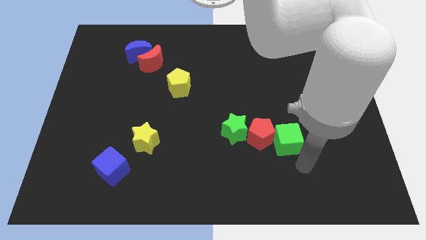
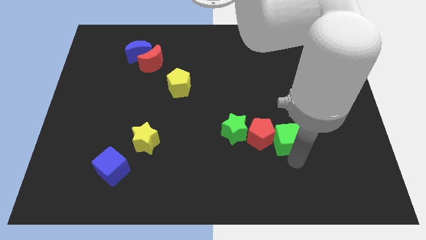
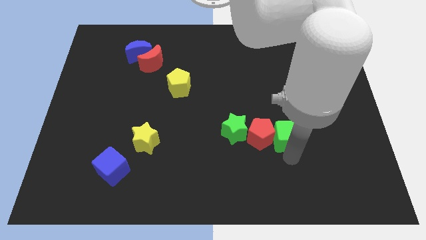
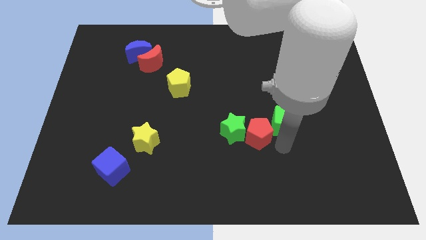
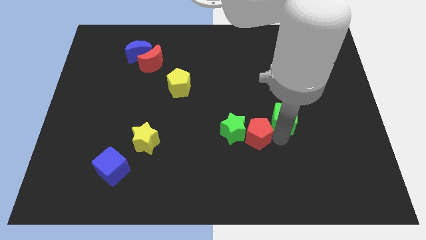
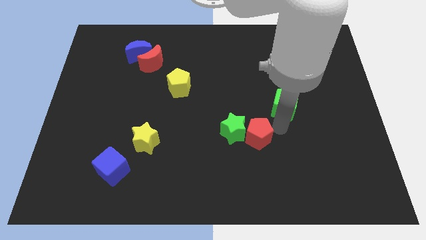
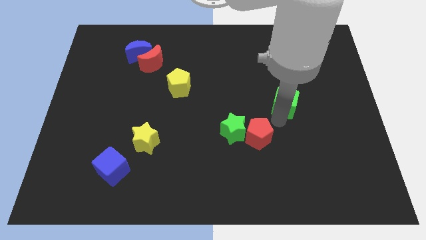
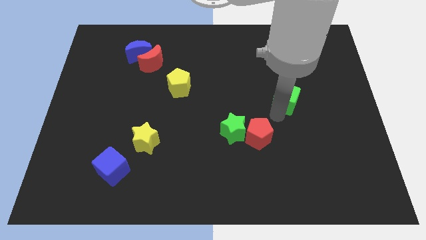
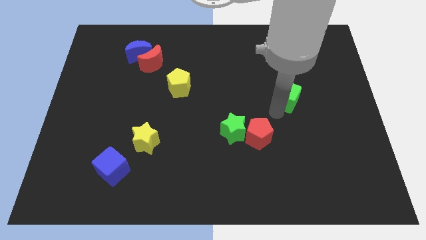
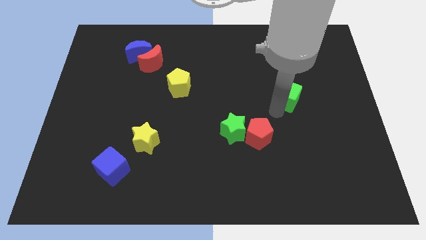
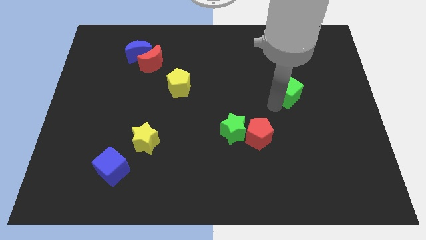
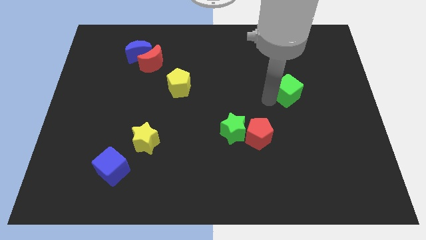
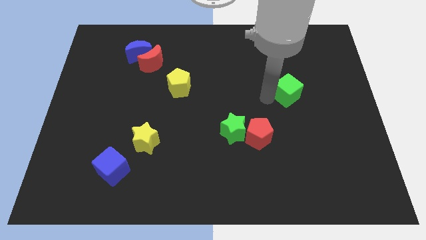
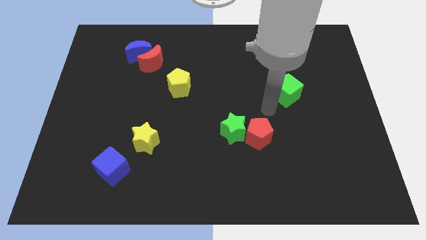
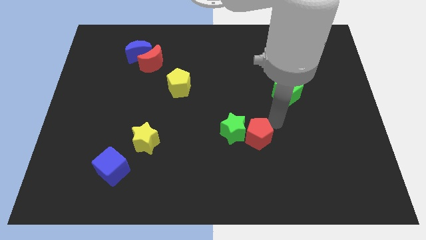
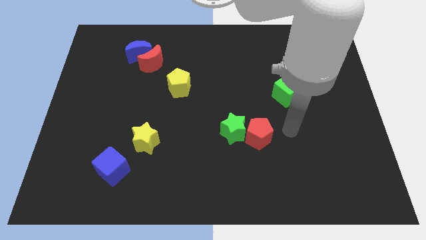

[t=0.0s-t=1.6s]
separate the green cube from the right side of the red pentagon

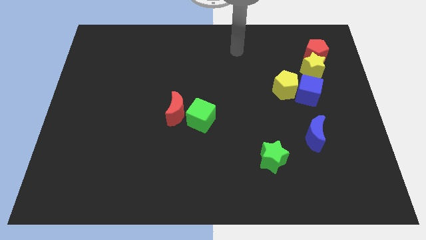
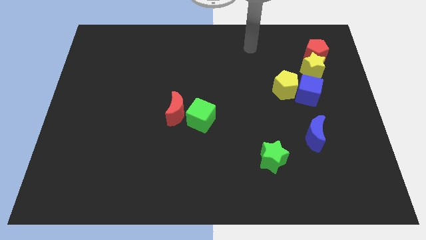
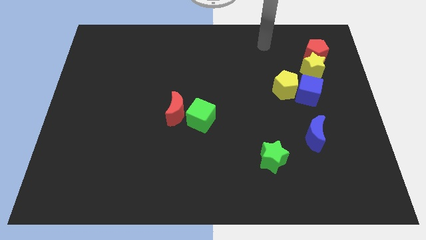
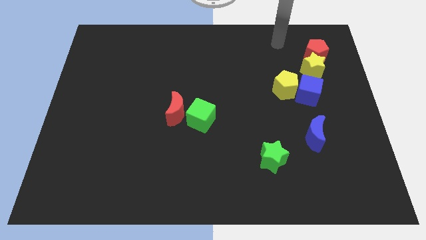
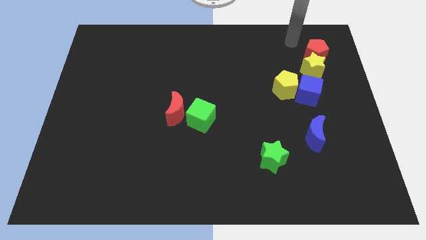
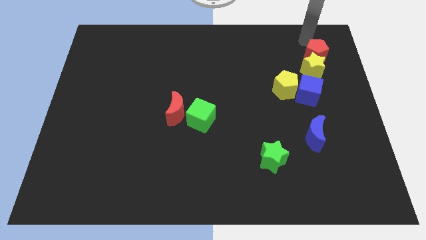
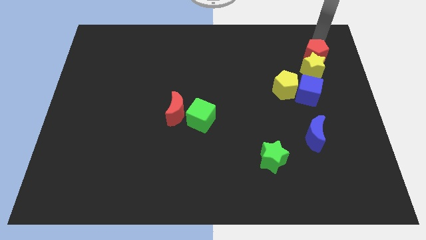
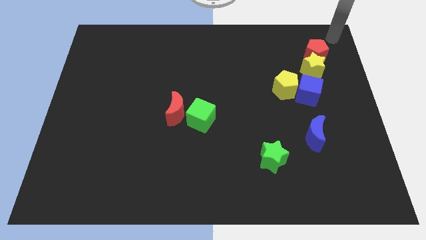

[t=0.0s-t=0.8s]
move the arm above the red pentagon

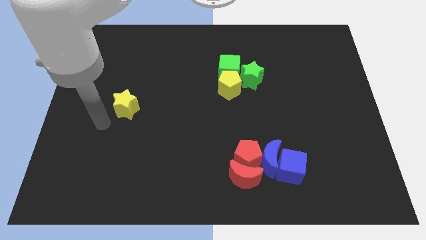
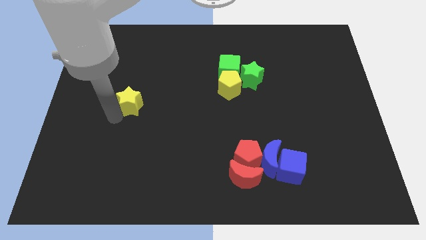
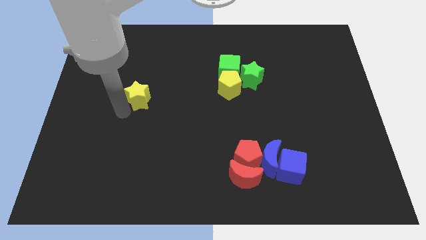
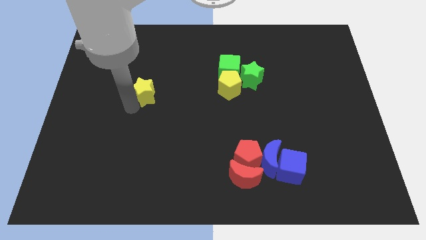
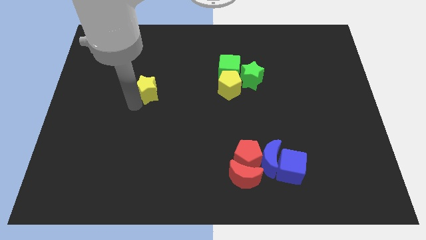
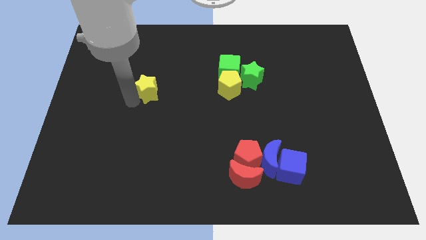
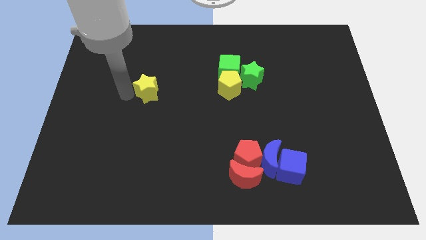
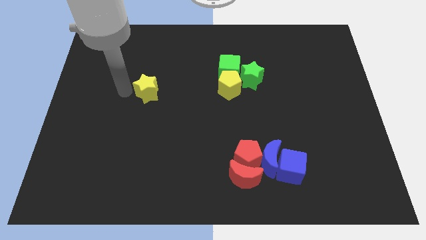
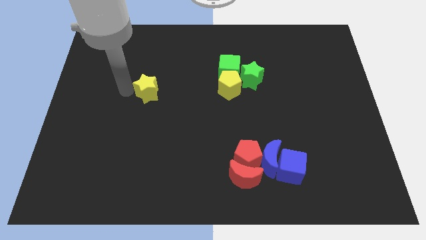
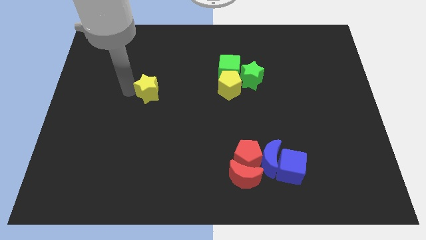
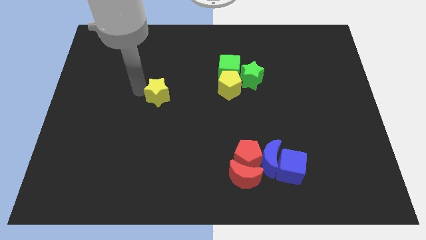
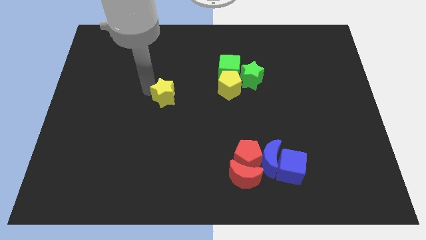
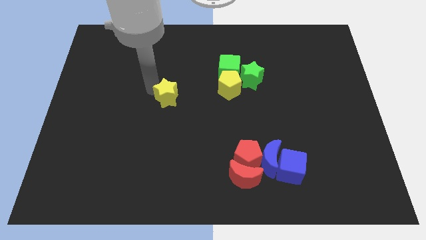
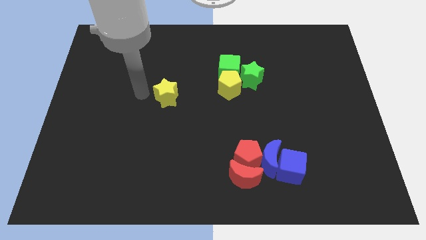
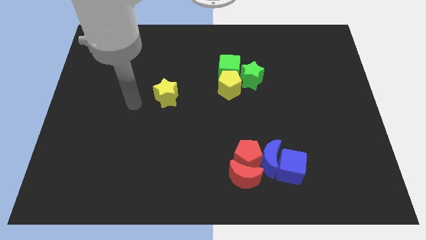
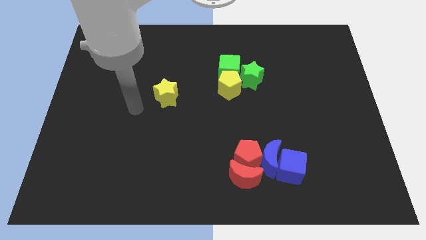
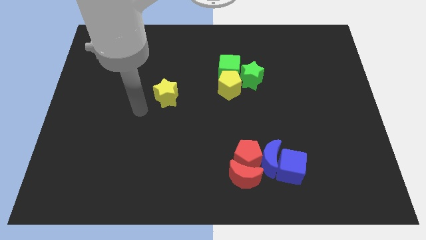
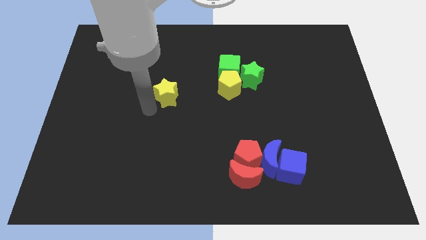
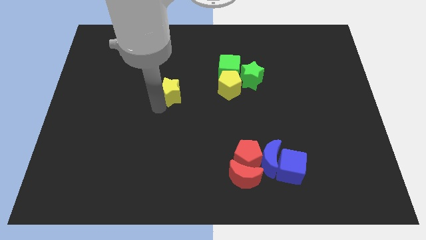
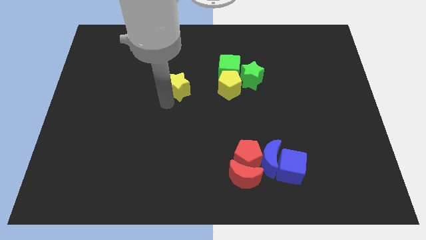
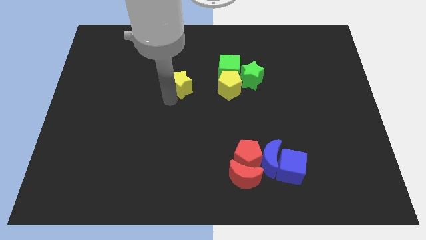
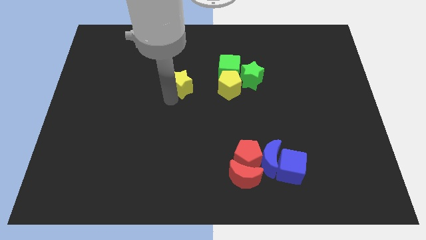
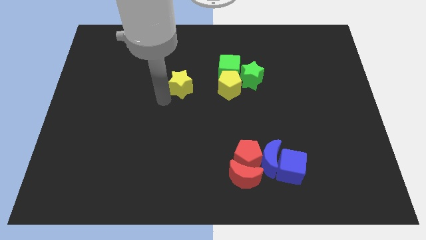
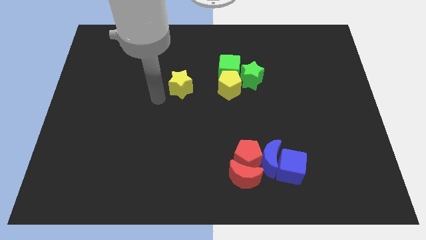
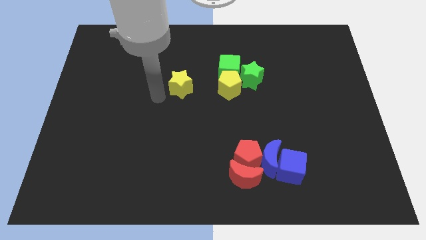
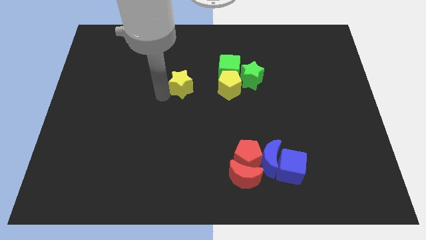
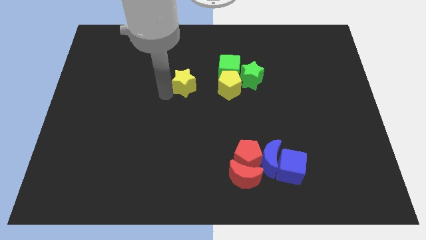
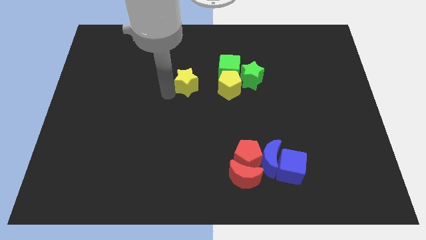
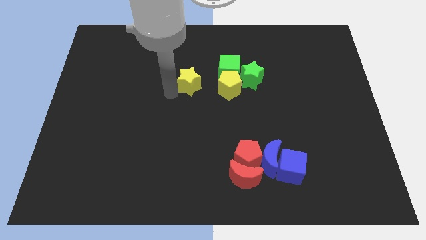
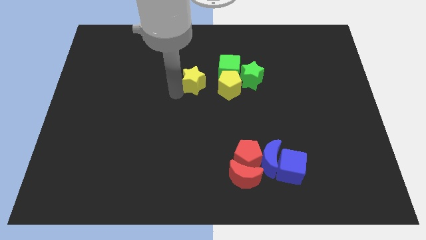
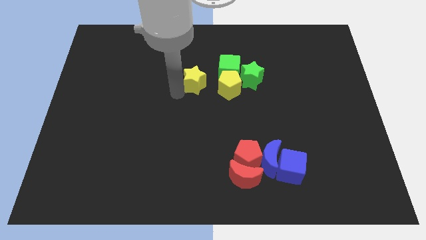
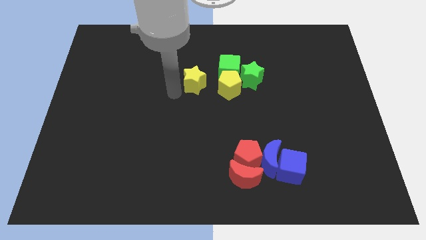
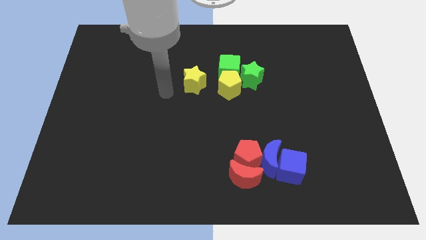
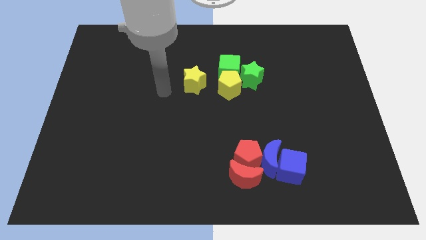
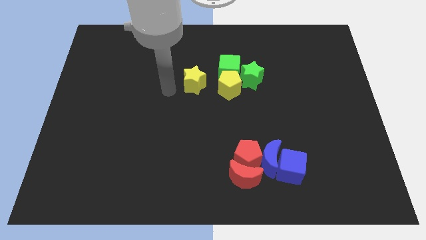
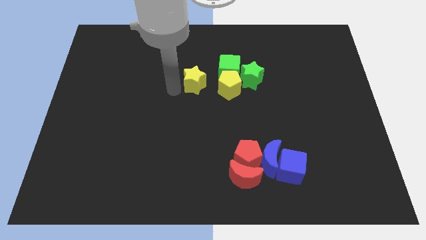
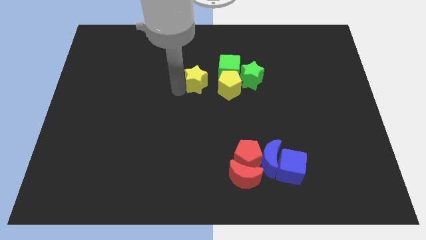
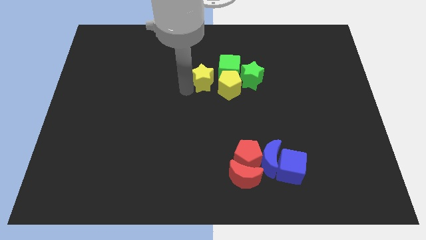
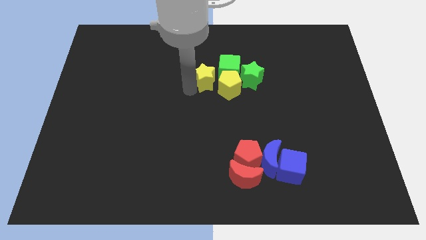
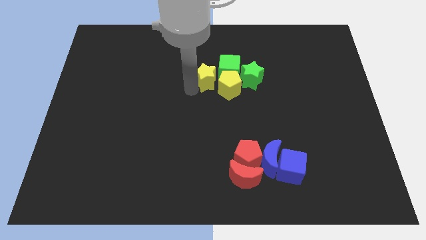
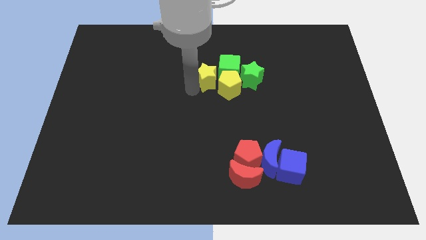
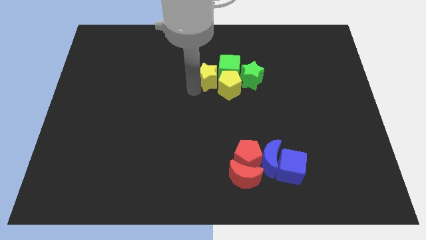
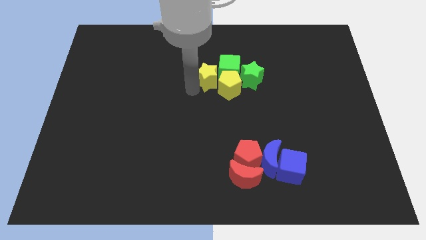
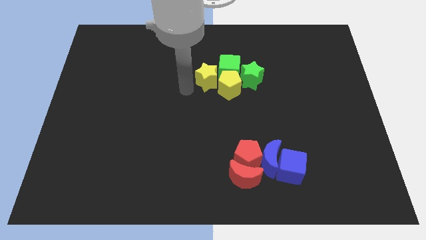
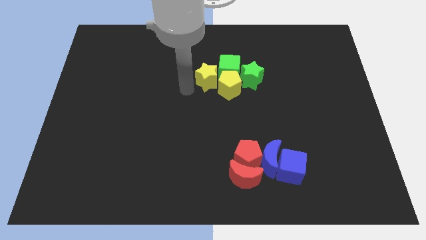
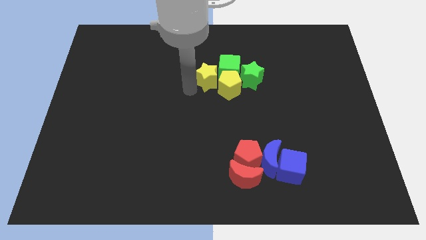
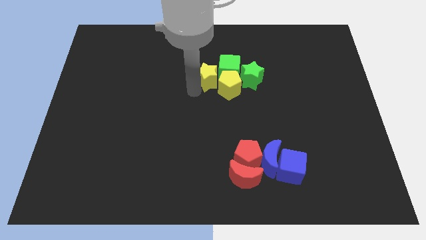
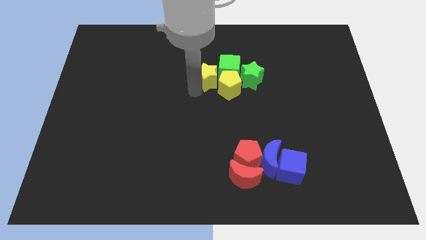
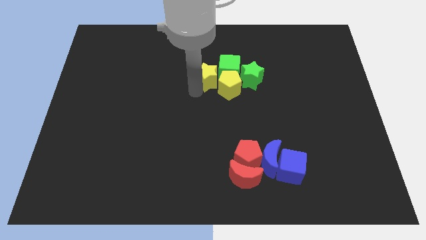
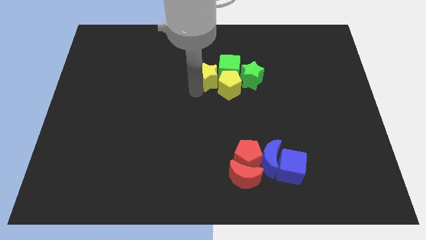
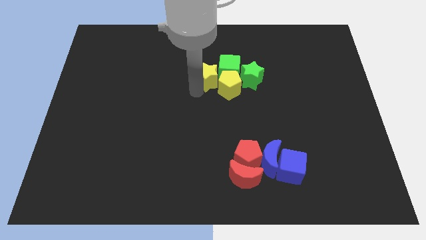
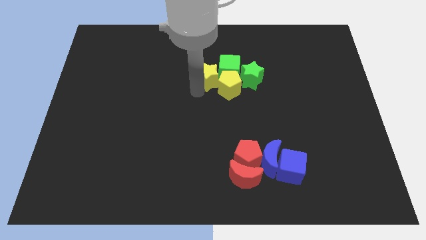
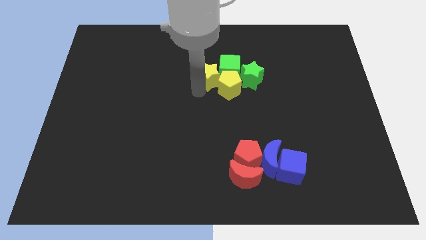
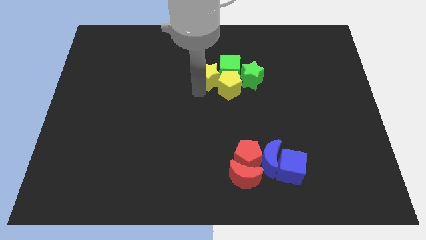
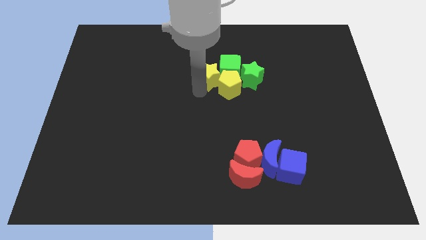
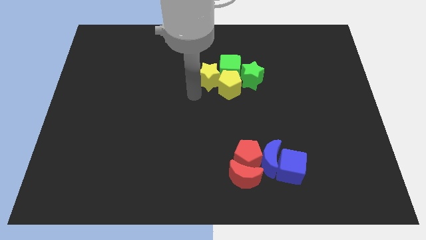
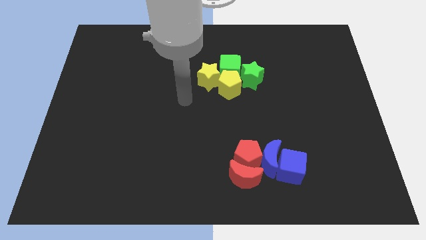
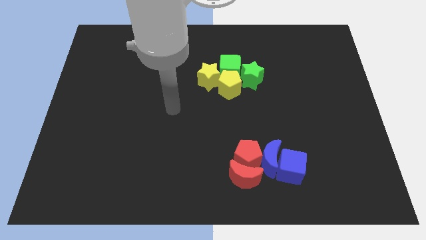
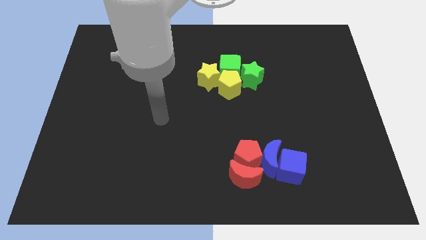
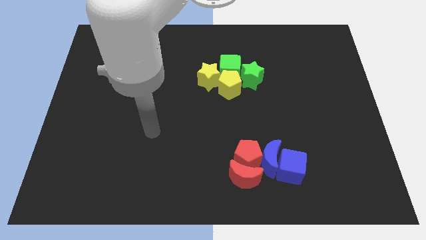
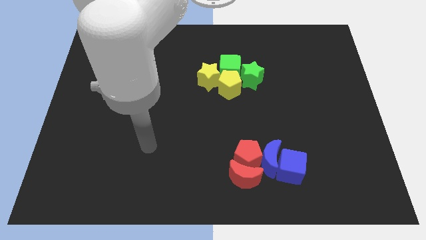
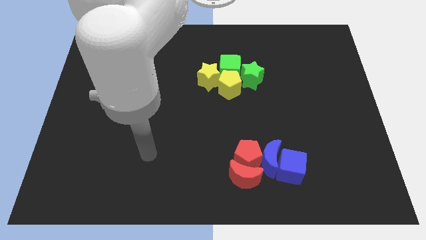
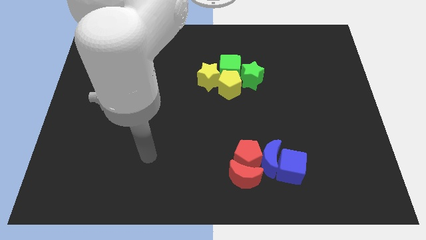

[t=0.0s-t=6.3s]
make the yellow star to touch the green cube and yellow pentagon

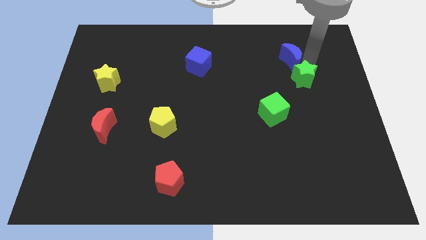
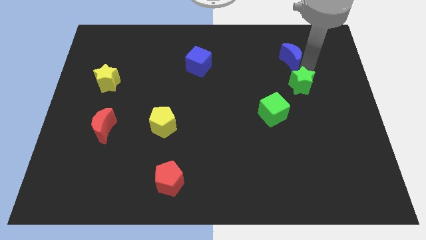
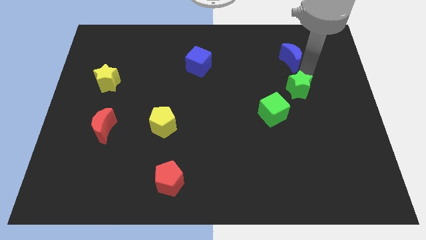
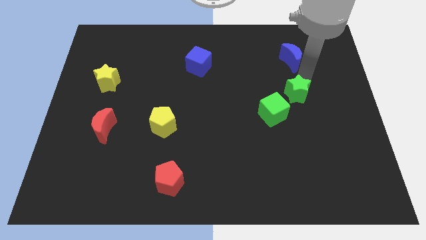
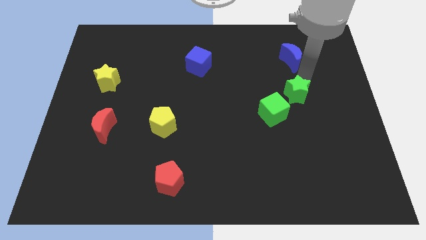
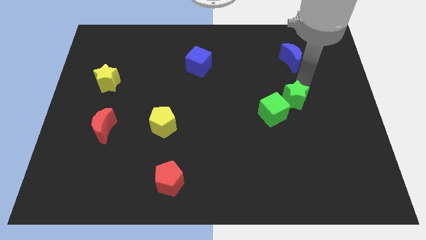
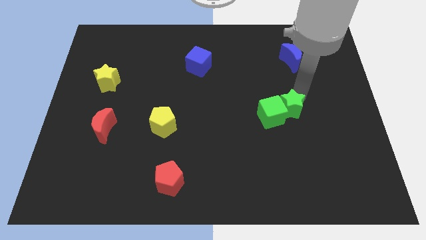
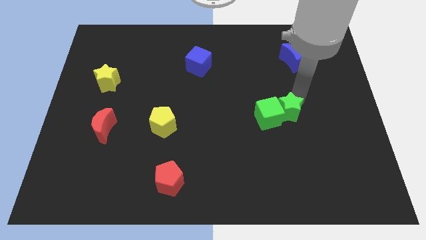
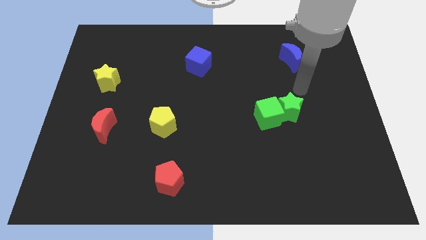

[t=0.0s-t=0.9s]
push green star right beside green cube
